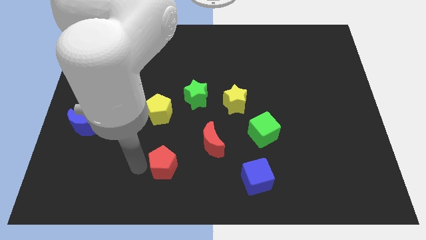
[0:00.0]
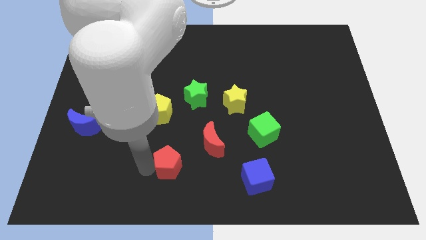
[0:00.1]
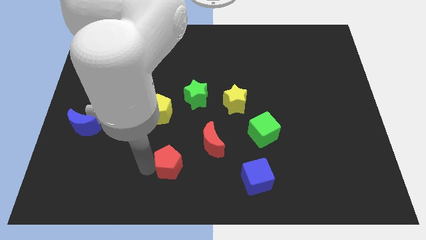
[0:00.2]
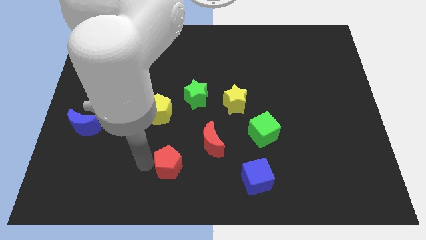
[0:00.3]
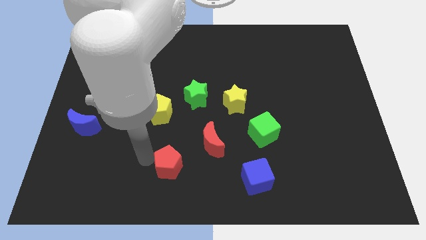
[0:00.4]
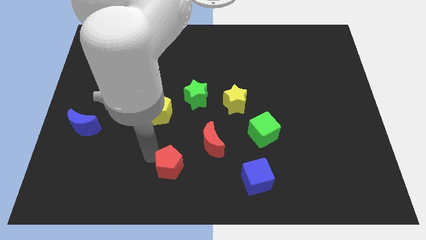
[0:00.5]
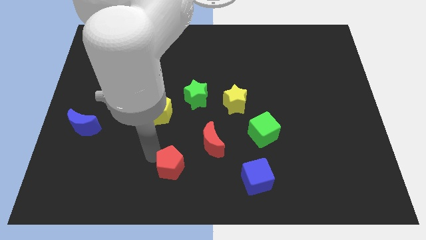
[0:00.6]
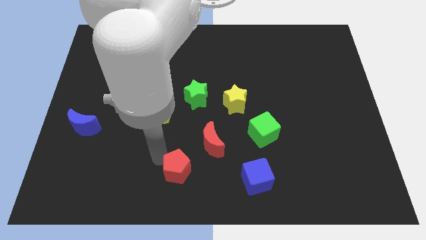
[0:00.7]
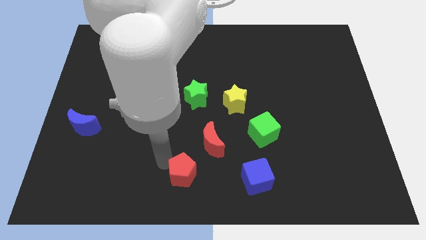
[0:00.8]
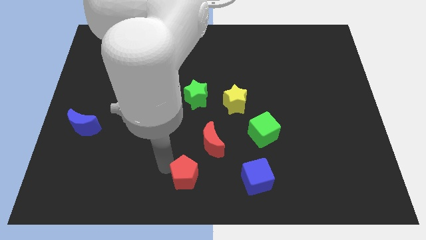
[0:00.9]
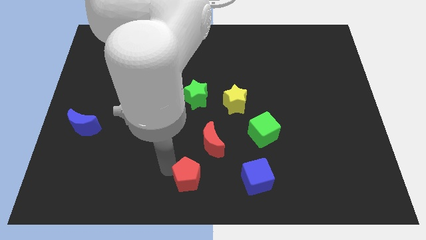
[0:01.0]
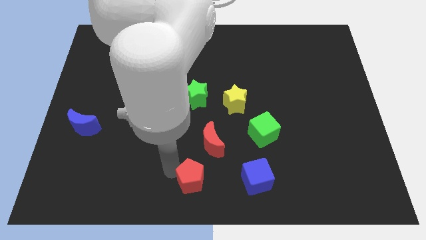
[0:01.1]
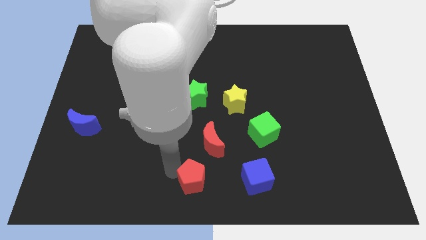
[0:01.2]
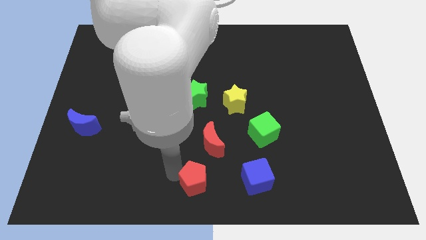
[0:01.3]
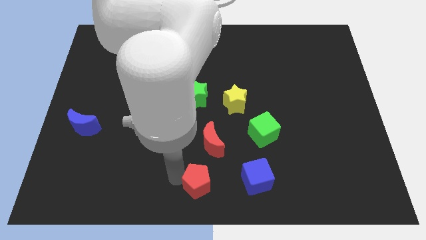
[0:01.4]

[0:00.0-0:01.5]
move the red pentagon to the left of the blue cube

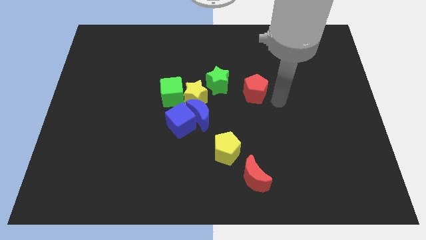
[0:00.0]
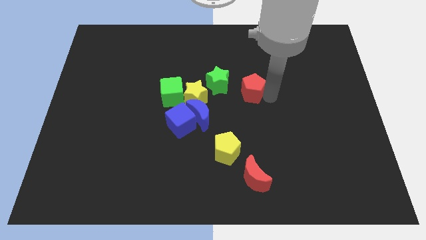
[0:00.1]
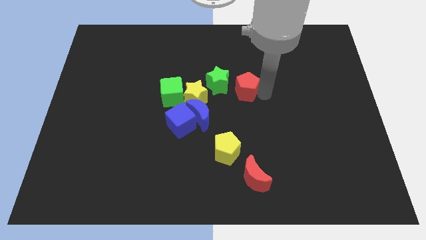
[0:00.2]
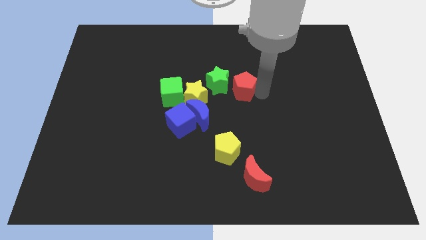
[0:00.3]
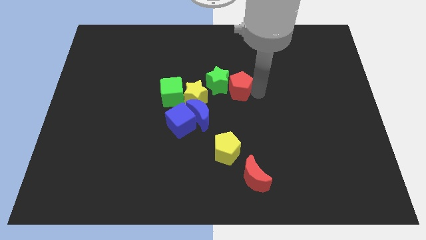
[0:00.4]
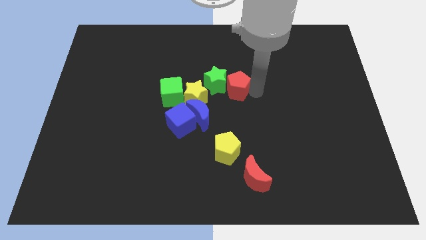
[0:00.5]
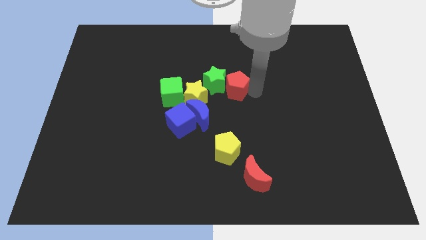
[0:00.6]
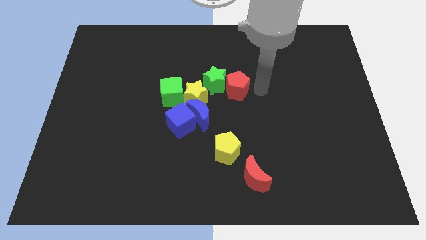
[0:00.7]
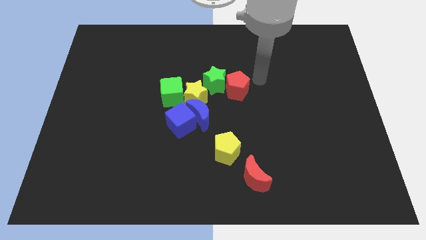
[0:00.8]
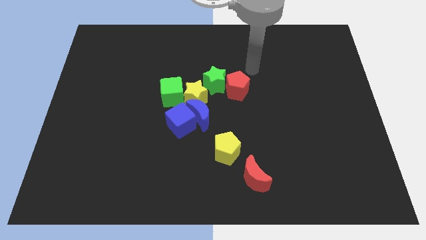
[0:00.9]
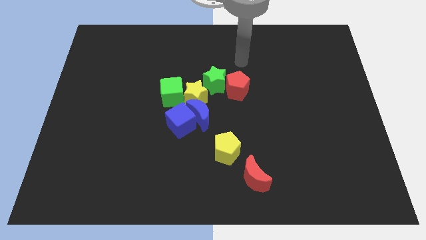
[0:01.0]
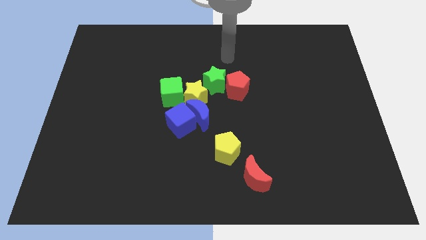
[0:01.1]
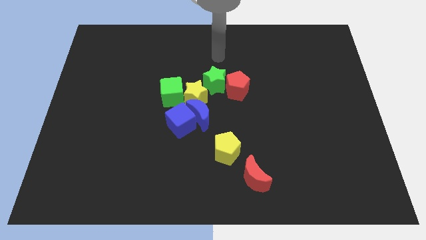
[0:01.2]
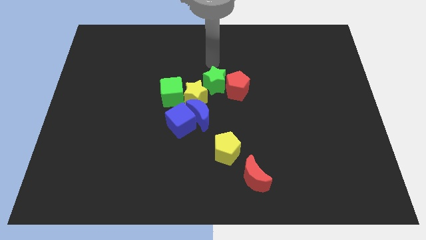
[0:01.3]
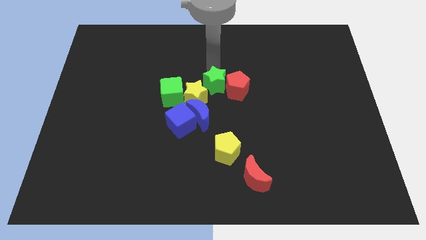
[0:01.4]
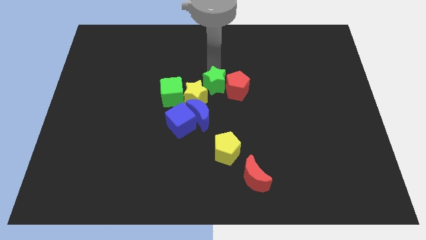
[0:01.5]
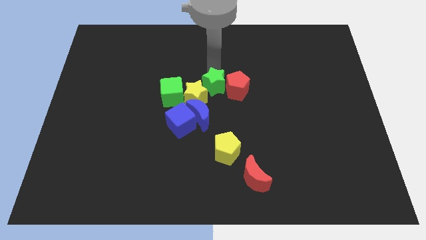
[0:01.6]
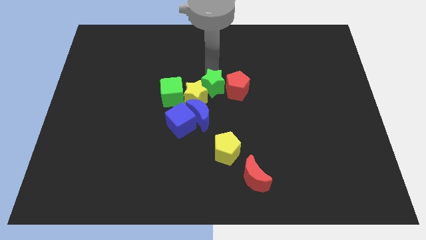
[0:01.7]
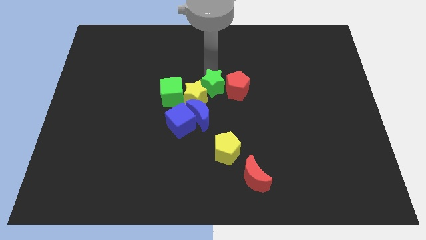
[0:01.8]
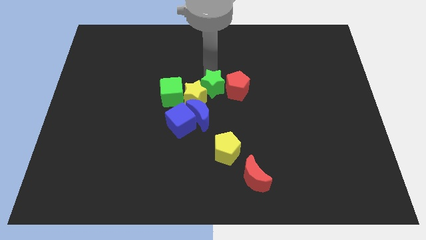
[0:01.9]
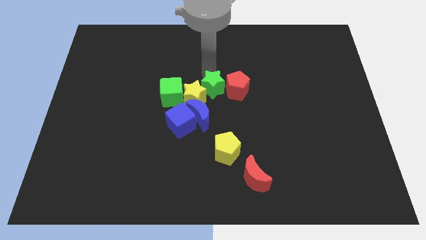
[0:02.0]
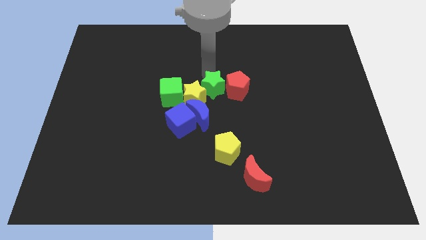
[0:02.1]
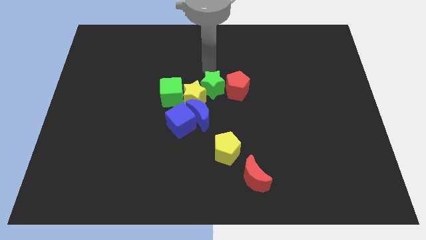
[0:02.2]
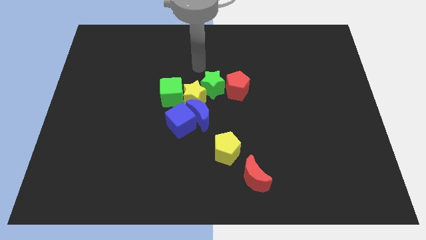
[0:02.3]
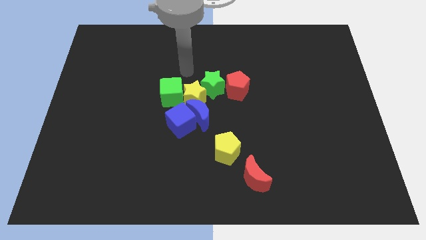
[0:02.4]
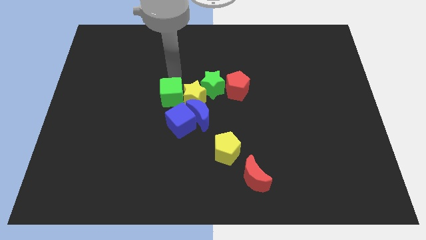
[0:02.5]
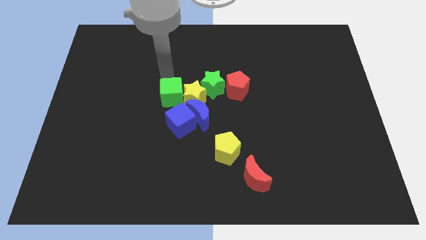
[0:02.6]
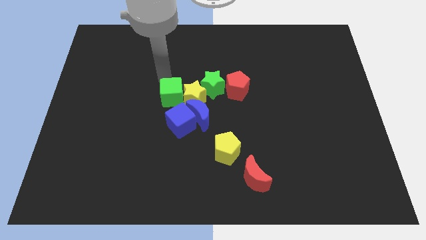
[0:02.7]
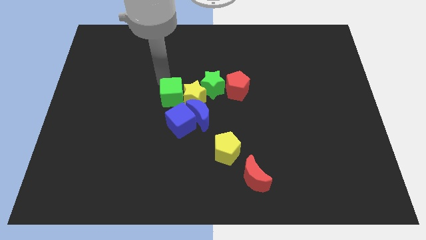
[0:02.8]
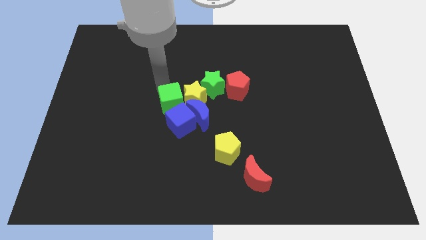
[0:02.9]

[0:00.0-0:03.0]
push the red pentagon into the green star

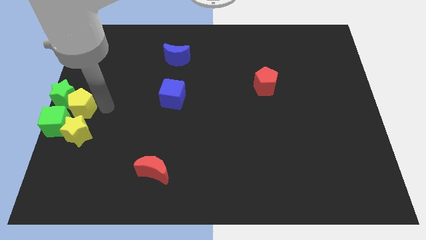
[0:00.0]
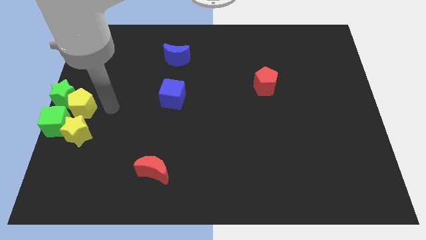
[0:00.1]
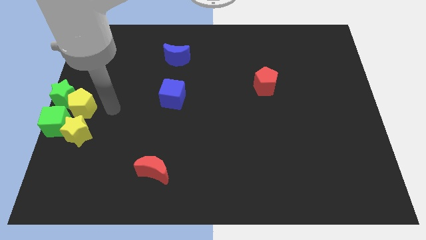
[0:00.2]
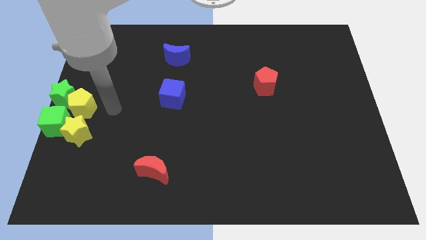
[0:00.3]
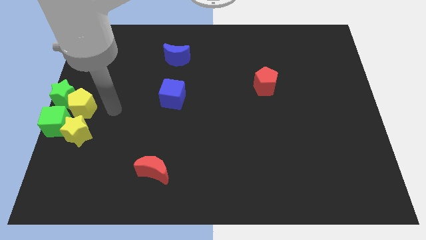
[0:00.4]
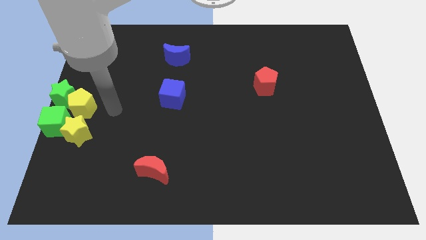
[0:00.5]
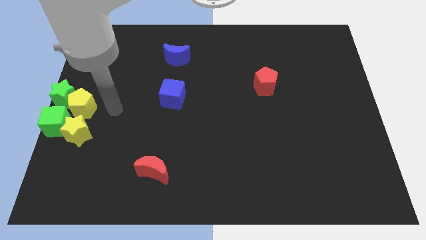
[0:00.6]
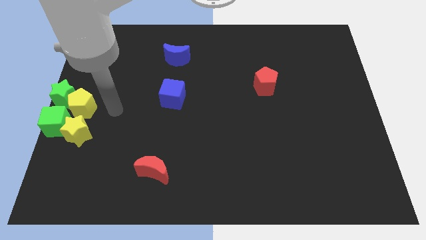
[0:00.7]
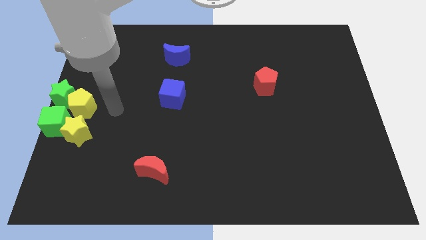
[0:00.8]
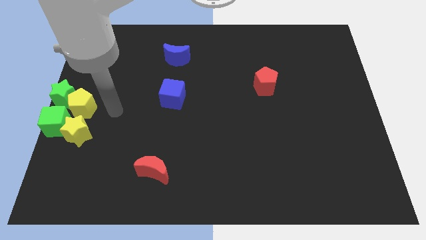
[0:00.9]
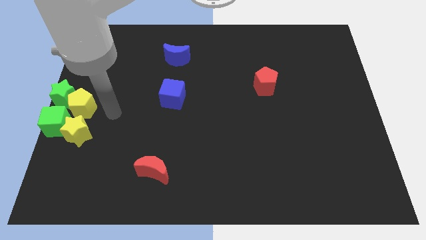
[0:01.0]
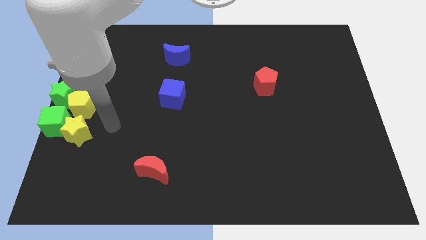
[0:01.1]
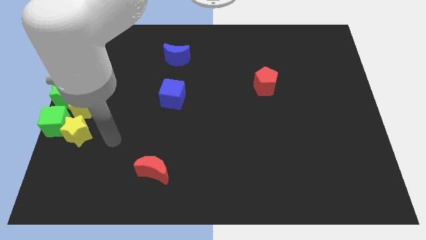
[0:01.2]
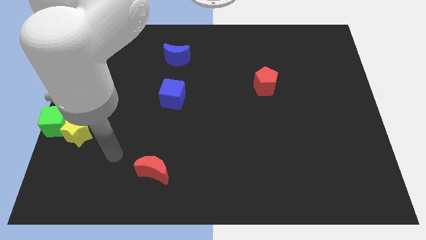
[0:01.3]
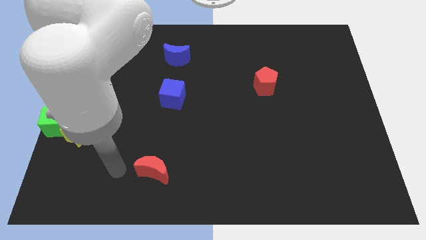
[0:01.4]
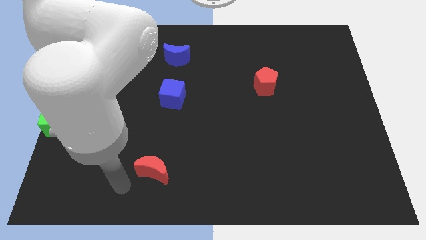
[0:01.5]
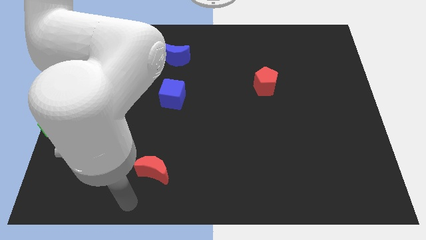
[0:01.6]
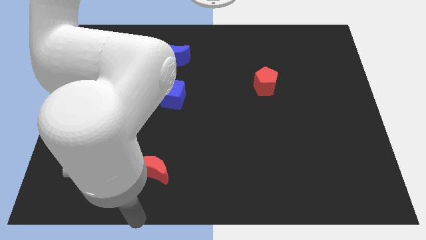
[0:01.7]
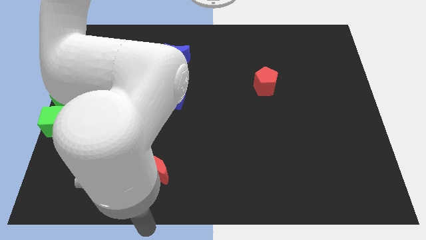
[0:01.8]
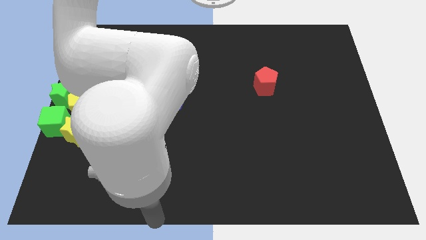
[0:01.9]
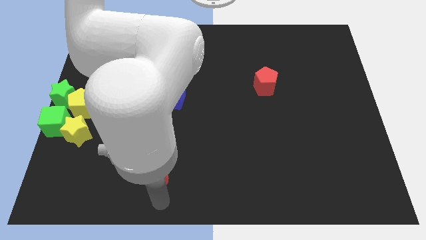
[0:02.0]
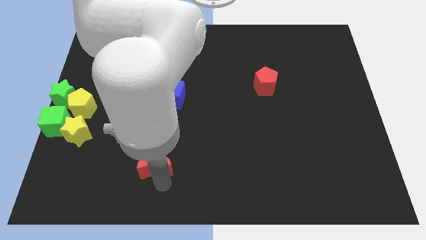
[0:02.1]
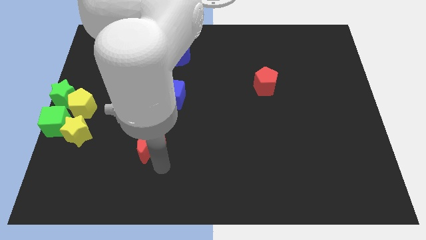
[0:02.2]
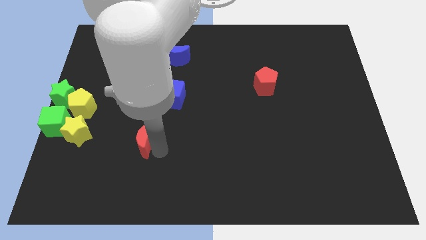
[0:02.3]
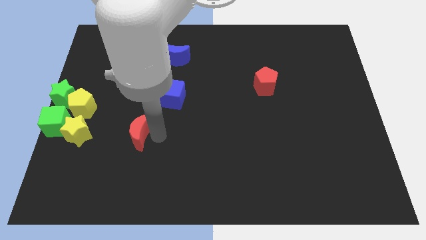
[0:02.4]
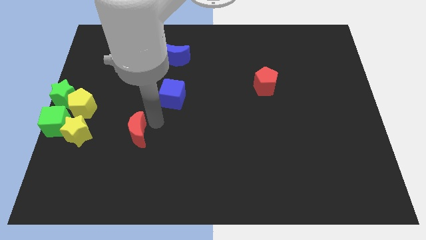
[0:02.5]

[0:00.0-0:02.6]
move the red crescent to the right of the yellow star

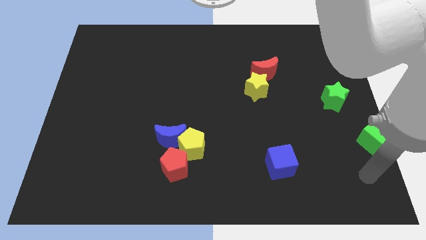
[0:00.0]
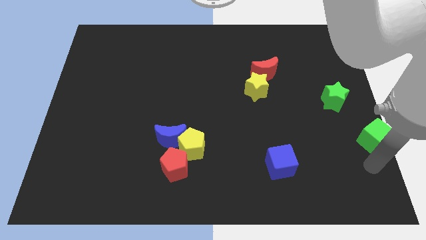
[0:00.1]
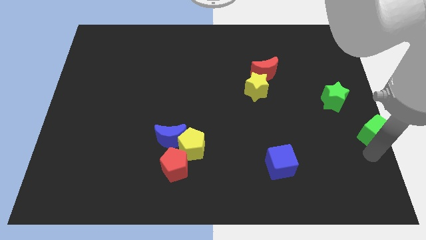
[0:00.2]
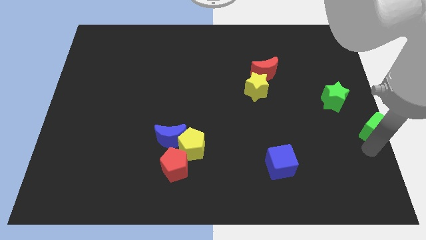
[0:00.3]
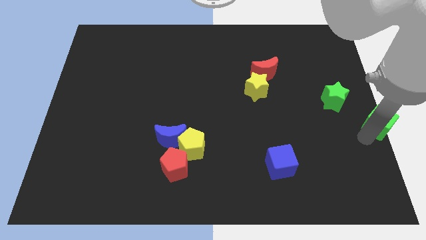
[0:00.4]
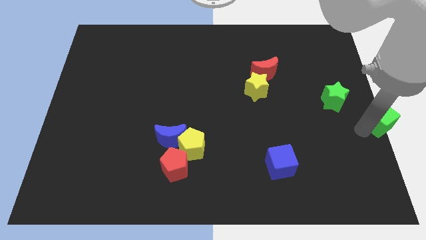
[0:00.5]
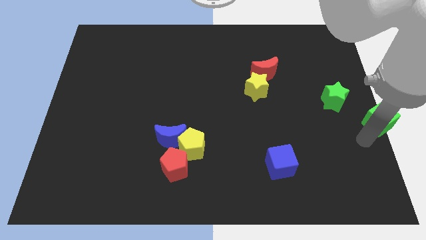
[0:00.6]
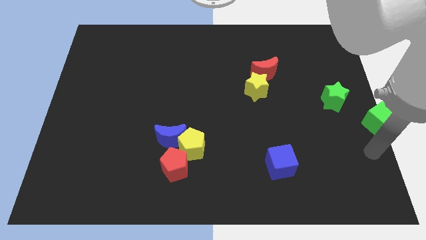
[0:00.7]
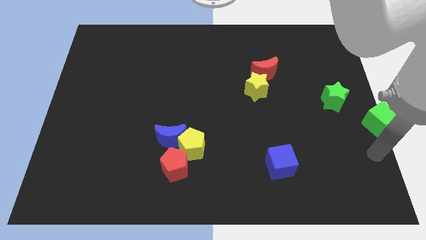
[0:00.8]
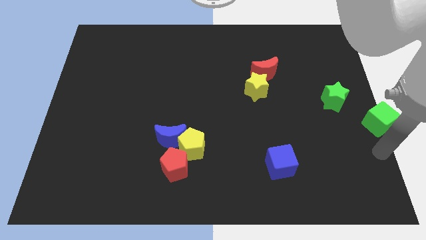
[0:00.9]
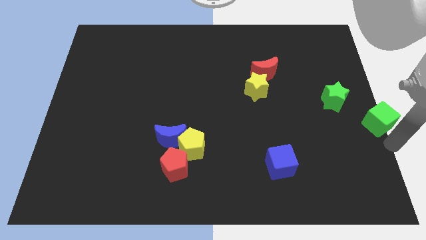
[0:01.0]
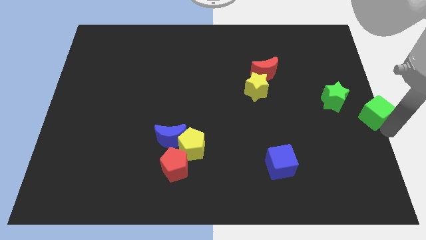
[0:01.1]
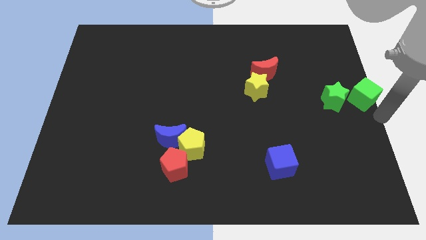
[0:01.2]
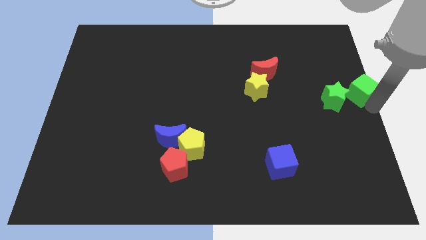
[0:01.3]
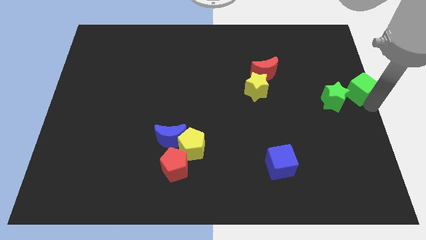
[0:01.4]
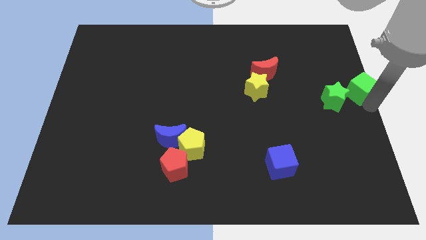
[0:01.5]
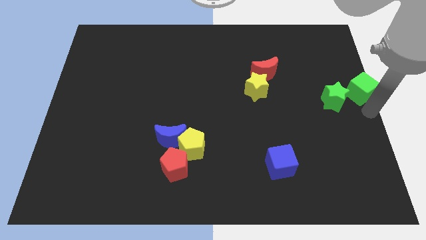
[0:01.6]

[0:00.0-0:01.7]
move the green cube right to the green star

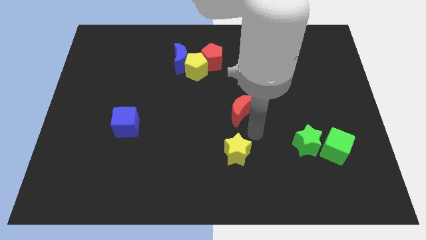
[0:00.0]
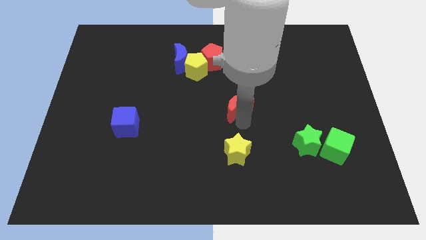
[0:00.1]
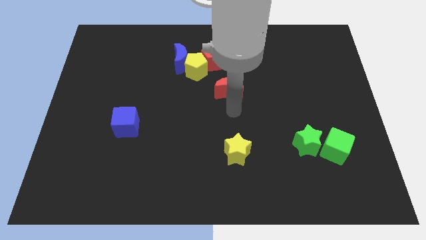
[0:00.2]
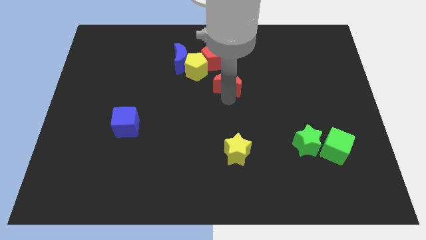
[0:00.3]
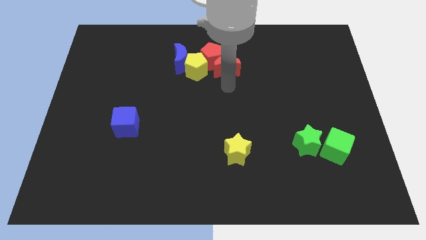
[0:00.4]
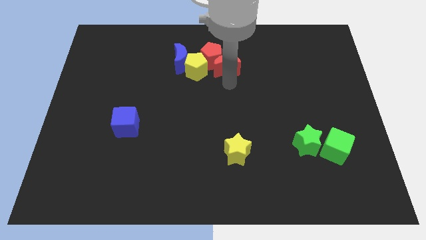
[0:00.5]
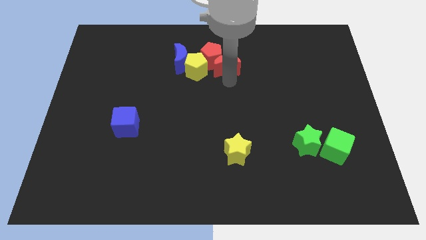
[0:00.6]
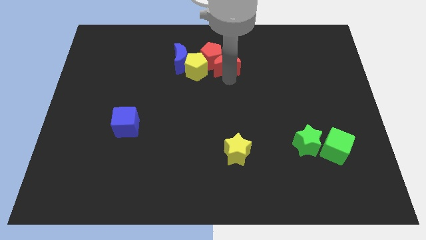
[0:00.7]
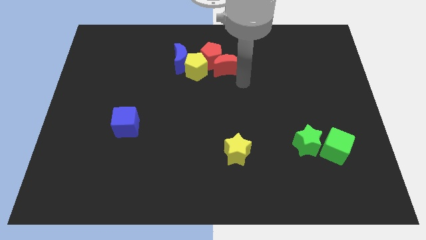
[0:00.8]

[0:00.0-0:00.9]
push the red crescent to the right of the yellow pentagon
